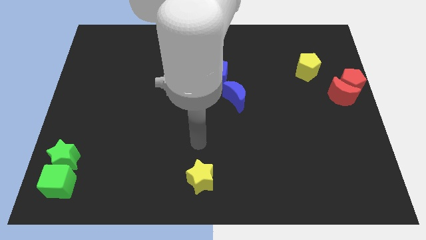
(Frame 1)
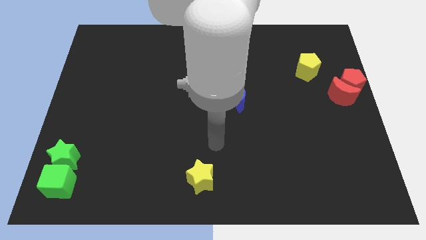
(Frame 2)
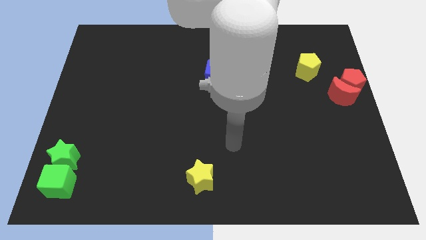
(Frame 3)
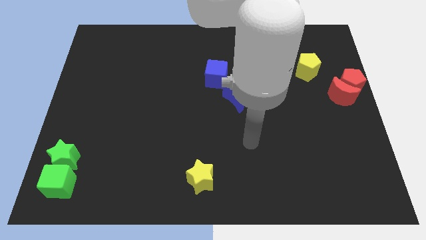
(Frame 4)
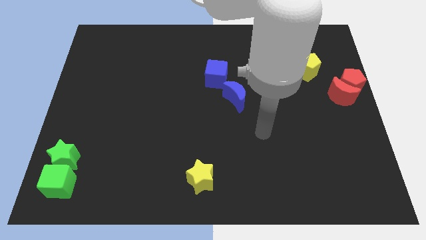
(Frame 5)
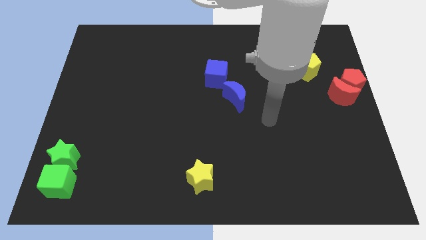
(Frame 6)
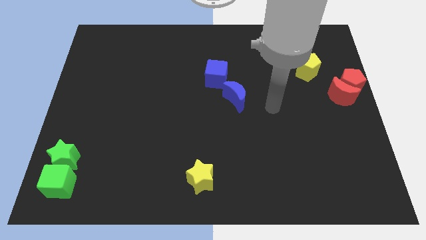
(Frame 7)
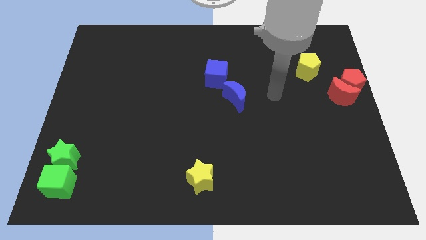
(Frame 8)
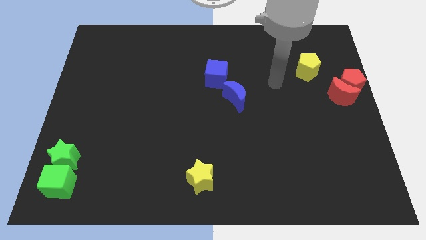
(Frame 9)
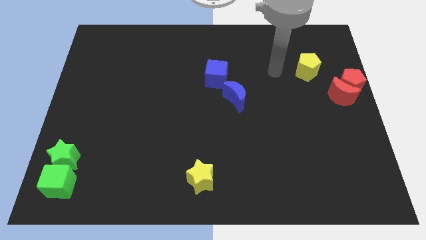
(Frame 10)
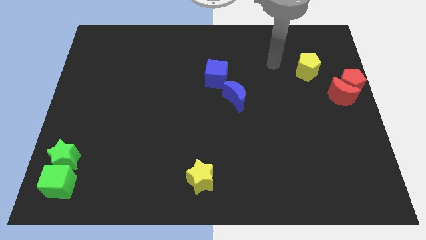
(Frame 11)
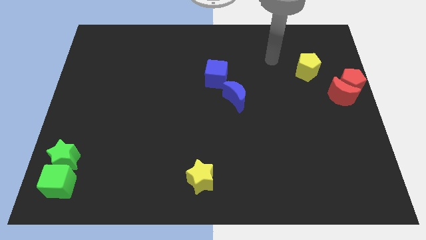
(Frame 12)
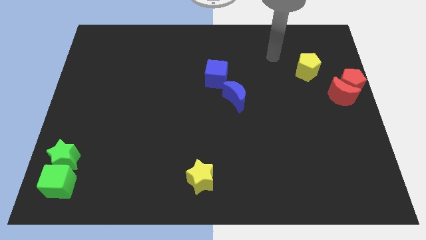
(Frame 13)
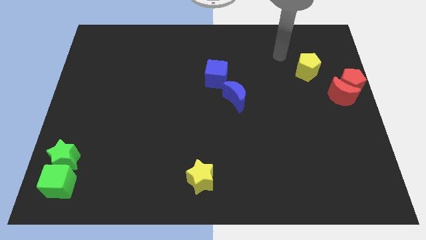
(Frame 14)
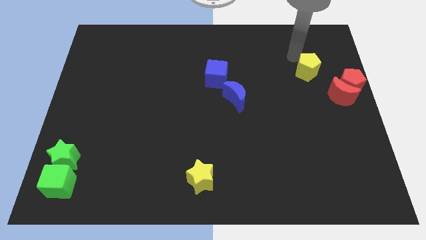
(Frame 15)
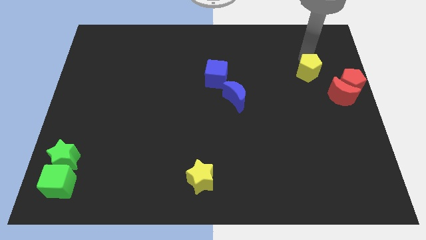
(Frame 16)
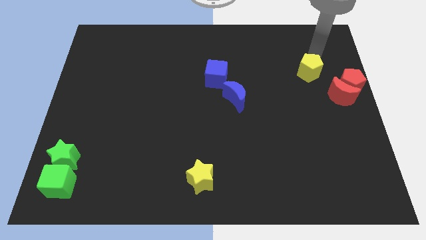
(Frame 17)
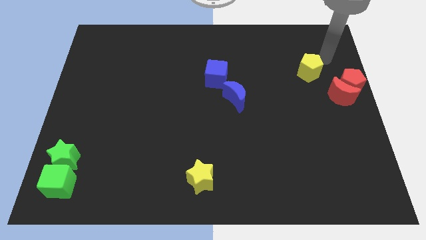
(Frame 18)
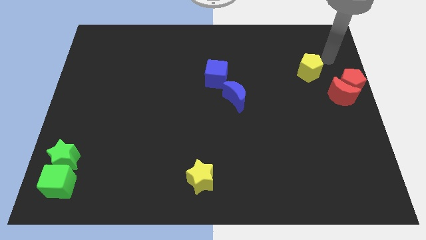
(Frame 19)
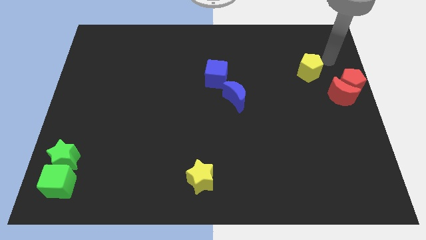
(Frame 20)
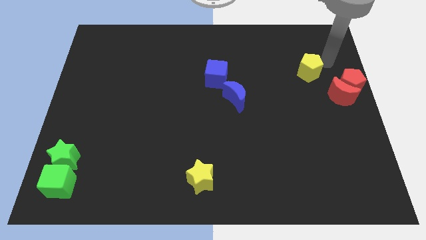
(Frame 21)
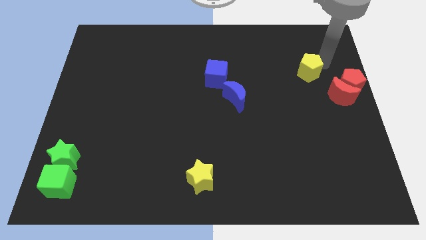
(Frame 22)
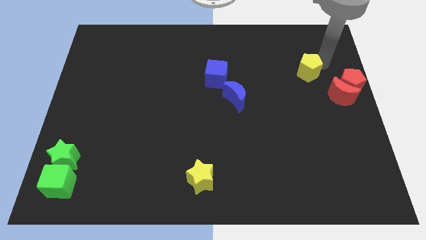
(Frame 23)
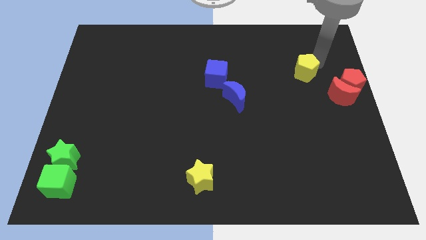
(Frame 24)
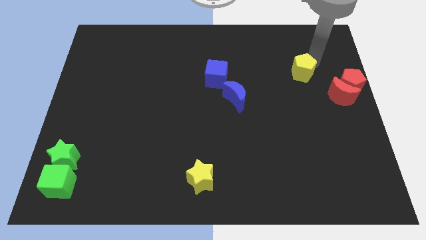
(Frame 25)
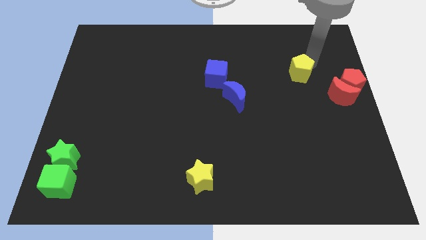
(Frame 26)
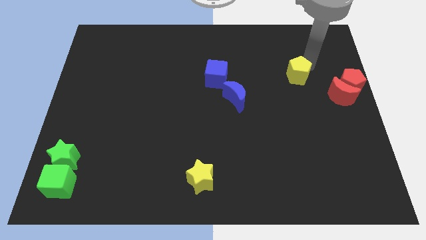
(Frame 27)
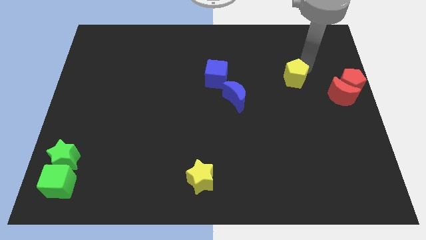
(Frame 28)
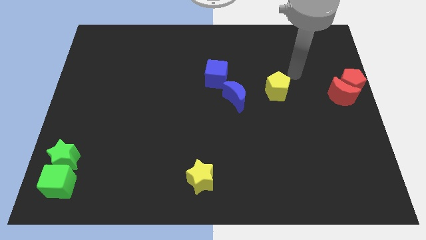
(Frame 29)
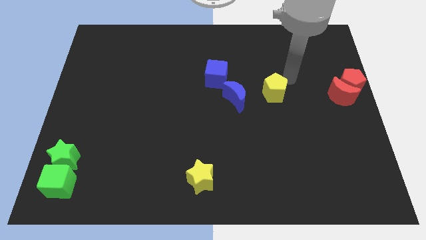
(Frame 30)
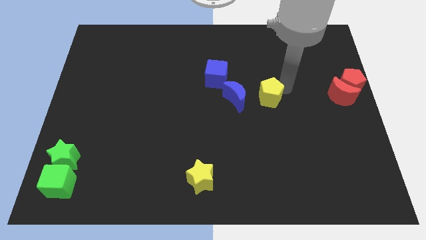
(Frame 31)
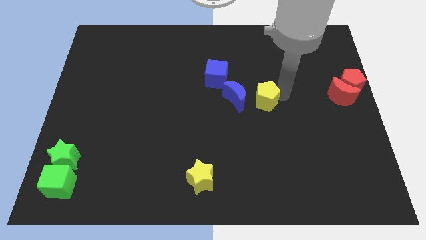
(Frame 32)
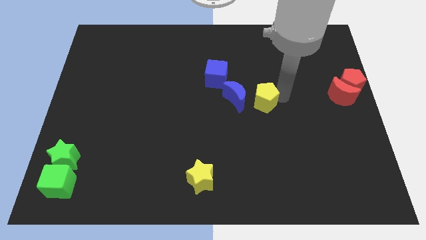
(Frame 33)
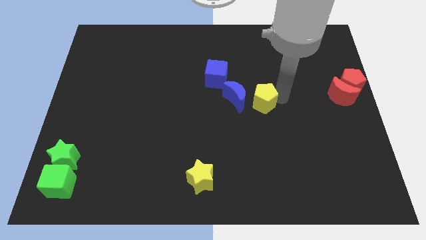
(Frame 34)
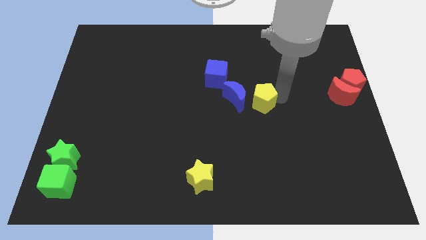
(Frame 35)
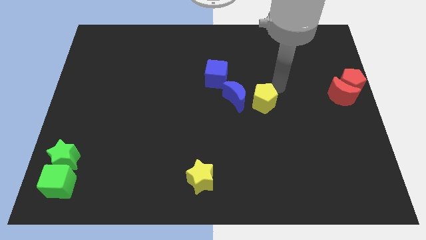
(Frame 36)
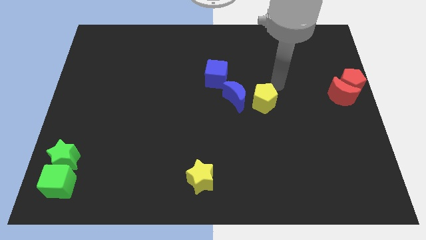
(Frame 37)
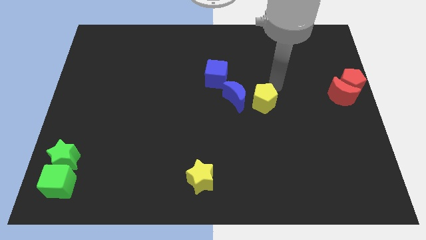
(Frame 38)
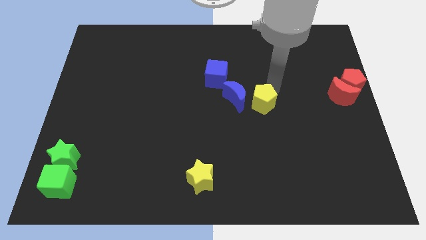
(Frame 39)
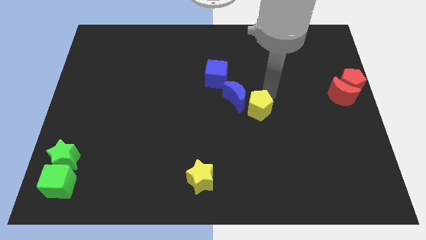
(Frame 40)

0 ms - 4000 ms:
place the yellow pentagon at right side of the blue crescent

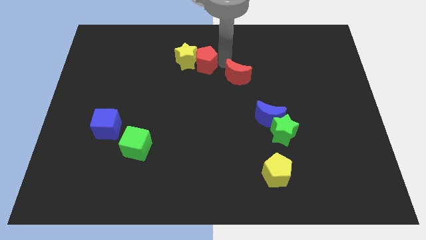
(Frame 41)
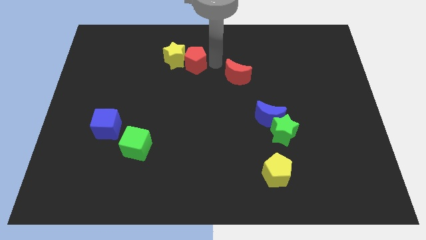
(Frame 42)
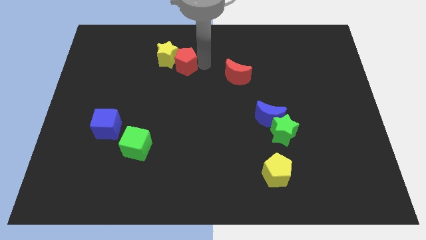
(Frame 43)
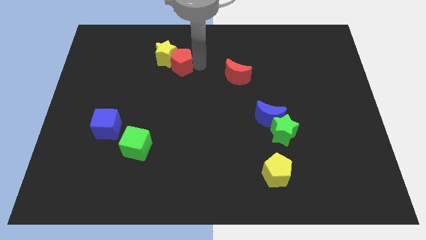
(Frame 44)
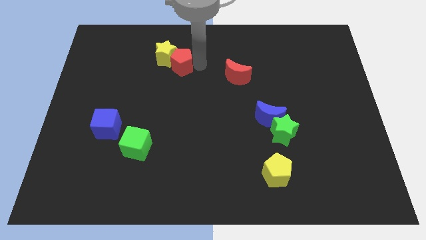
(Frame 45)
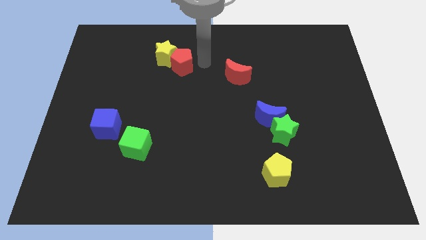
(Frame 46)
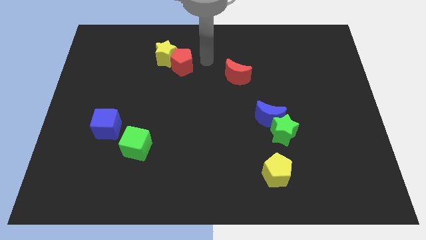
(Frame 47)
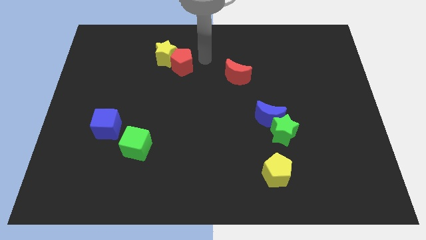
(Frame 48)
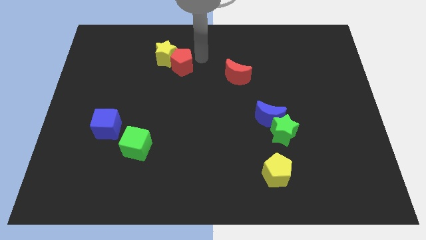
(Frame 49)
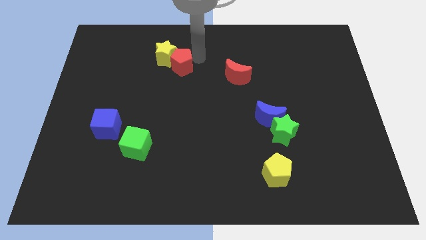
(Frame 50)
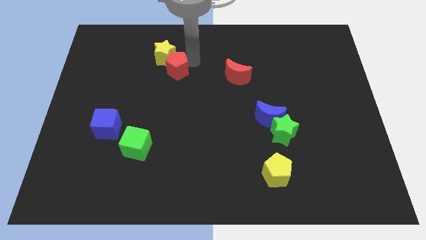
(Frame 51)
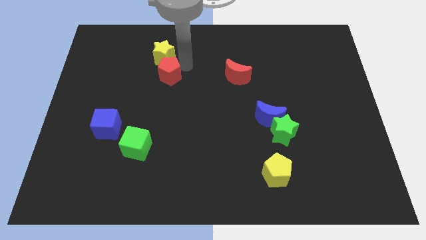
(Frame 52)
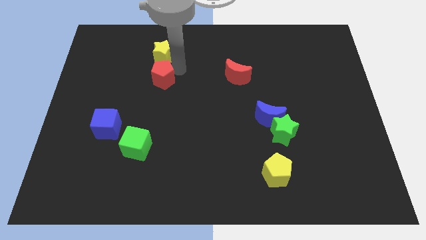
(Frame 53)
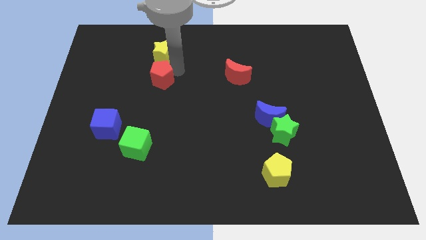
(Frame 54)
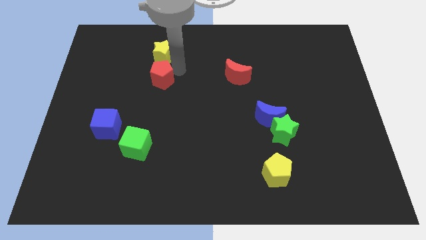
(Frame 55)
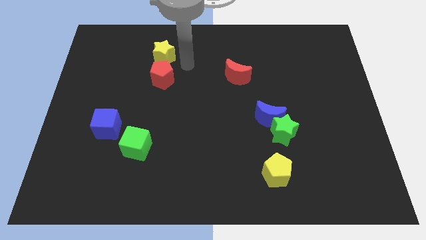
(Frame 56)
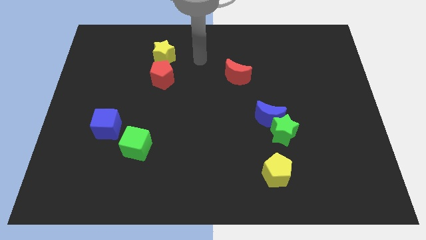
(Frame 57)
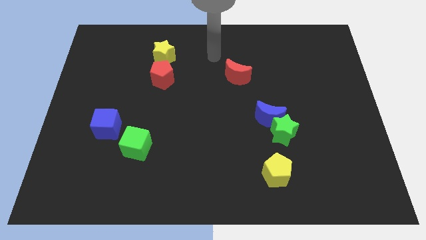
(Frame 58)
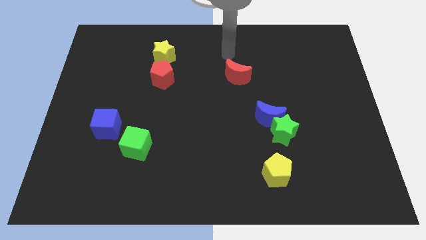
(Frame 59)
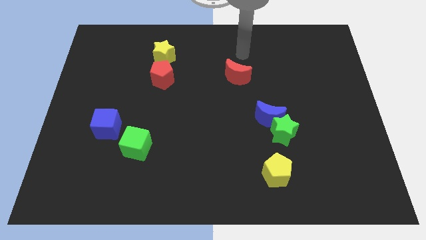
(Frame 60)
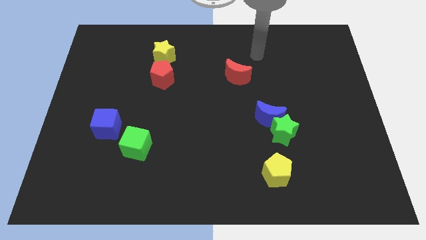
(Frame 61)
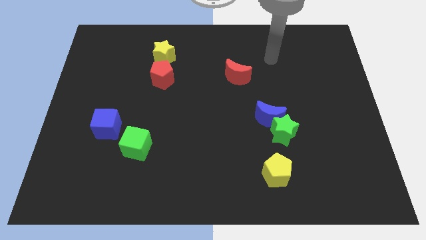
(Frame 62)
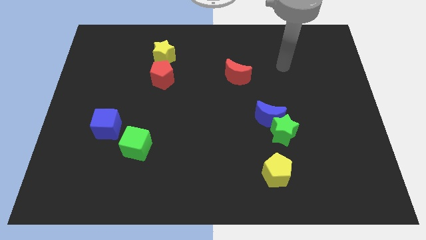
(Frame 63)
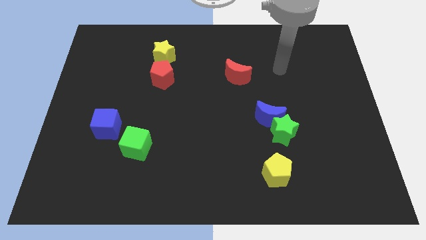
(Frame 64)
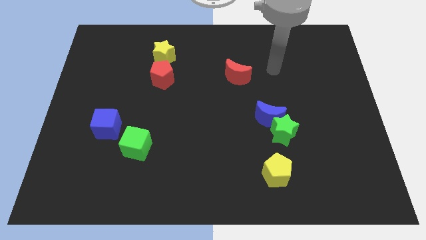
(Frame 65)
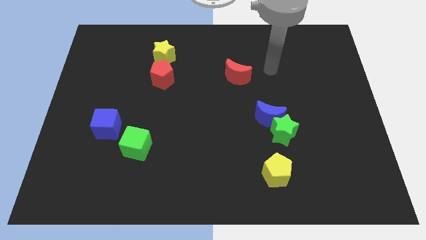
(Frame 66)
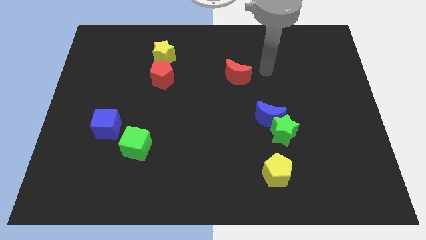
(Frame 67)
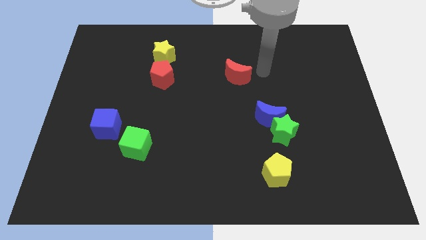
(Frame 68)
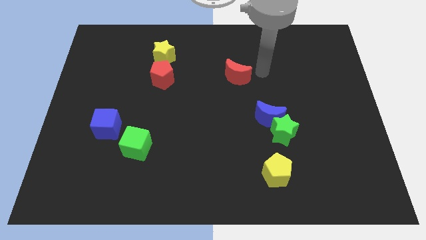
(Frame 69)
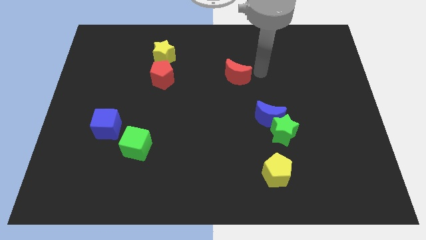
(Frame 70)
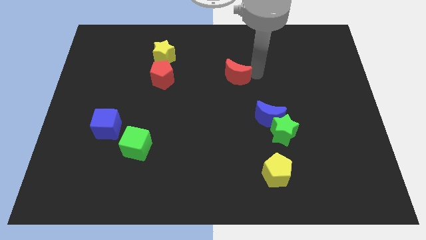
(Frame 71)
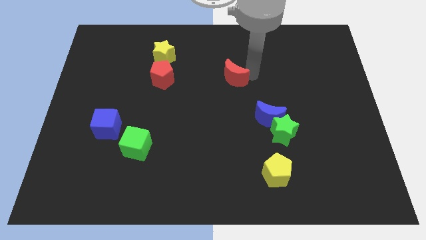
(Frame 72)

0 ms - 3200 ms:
separate the red moon from the red pentagon and yellow star

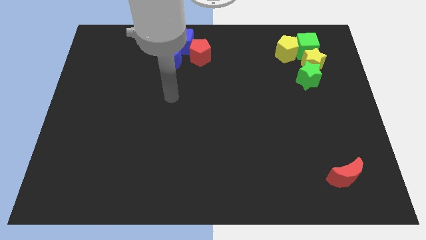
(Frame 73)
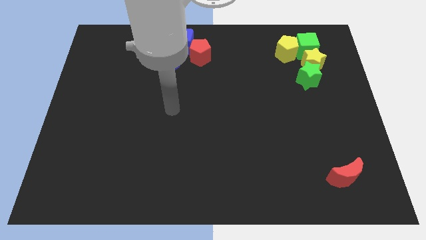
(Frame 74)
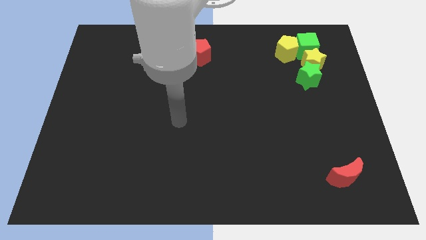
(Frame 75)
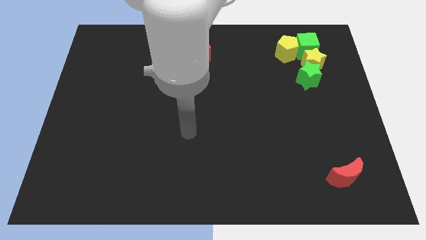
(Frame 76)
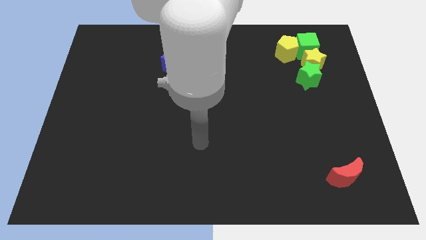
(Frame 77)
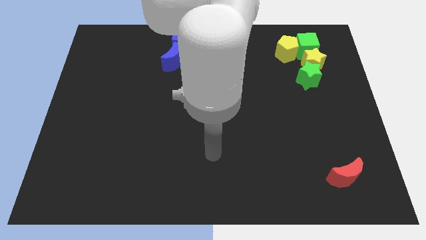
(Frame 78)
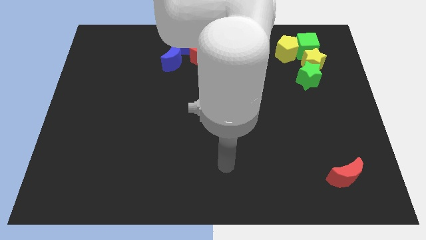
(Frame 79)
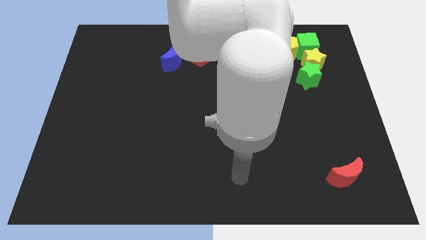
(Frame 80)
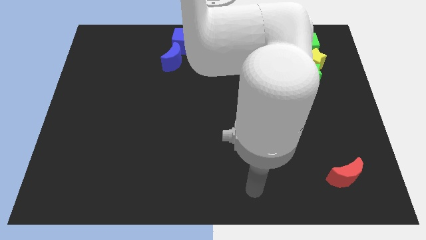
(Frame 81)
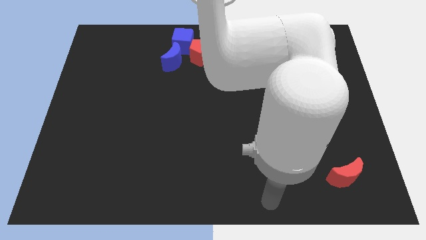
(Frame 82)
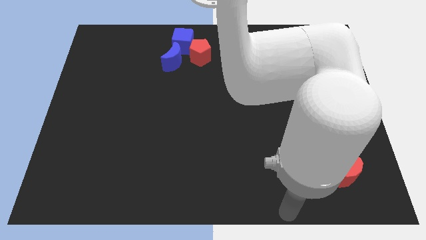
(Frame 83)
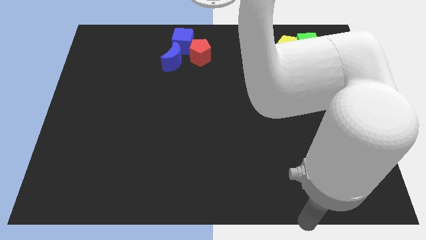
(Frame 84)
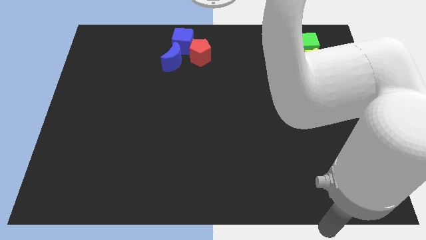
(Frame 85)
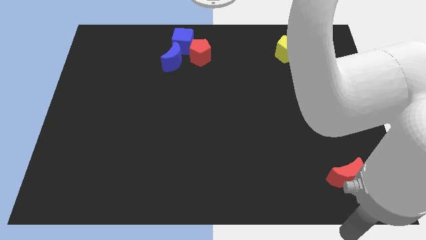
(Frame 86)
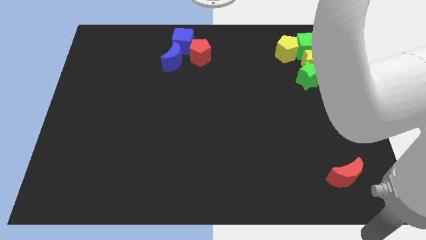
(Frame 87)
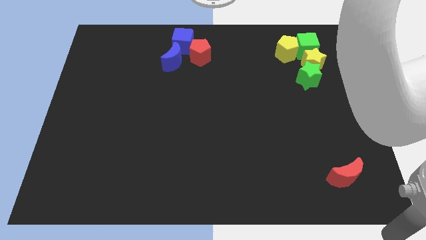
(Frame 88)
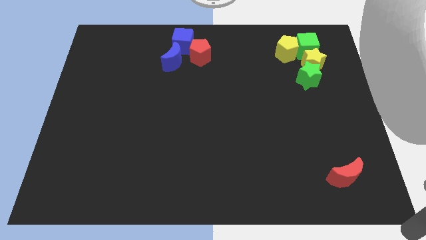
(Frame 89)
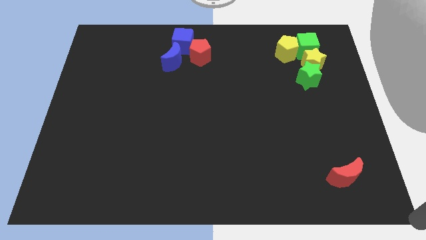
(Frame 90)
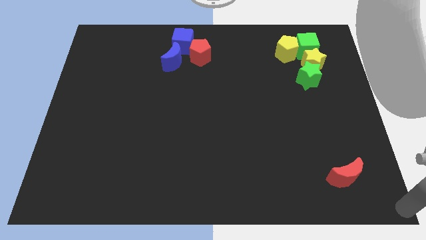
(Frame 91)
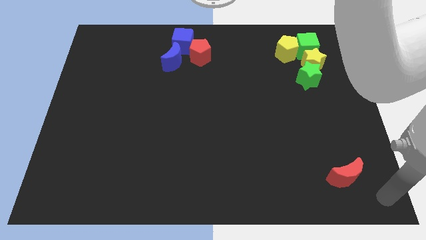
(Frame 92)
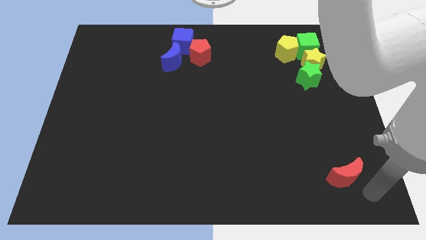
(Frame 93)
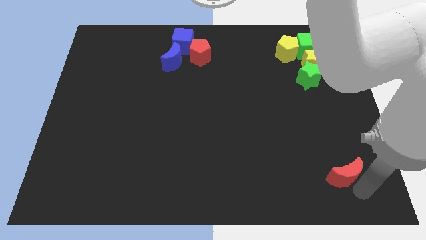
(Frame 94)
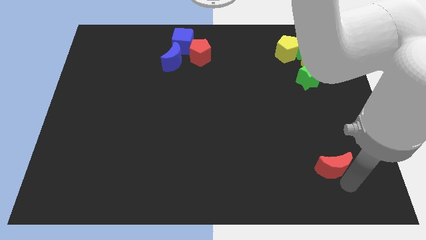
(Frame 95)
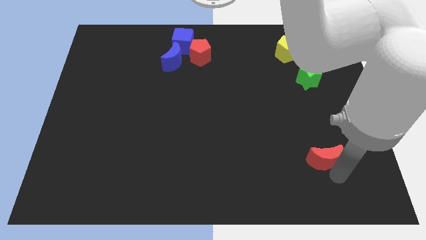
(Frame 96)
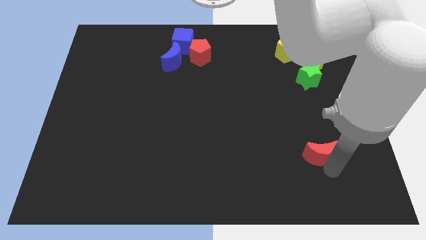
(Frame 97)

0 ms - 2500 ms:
move the red moon up slightly
